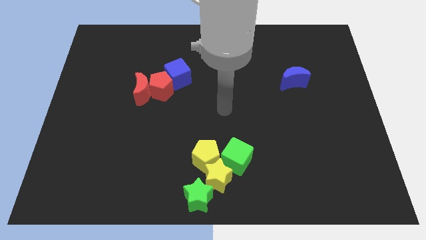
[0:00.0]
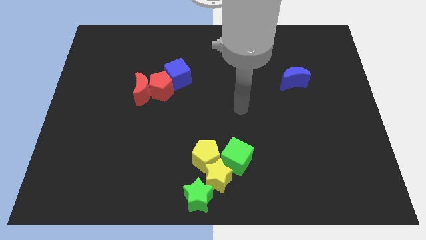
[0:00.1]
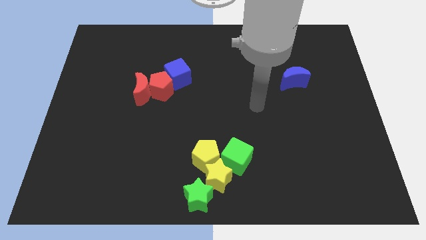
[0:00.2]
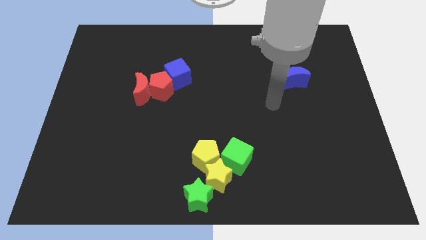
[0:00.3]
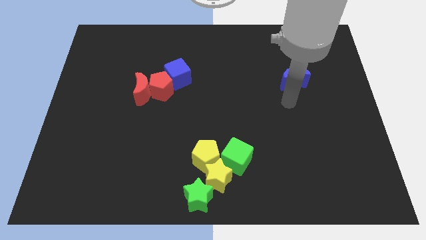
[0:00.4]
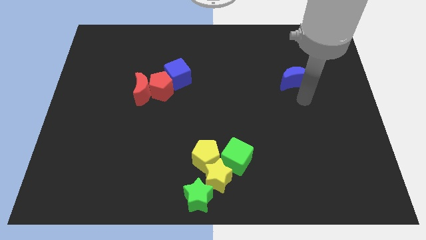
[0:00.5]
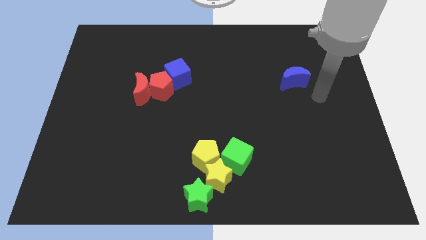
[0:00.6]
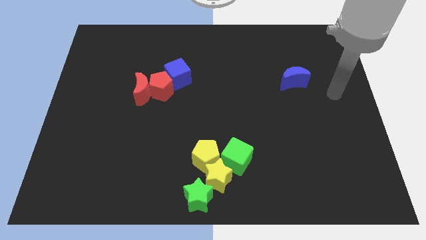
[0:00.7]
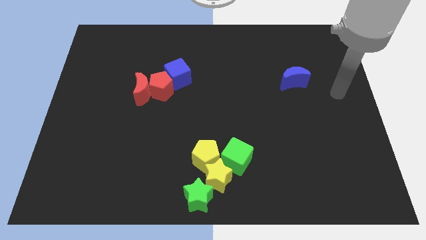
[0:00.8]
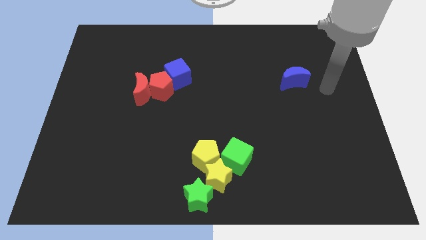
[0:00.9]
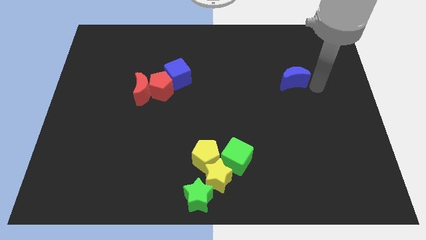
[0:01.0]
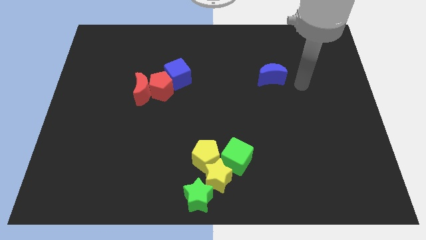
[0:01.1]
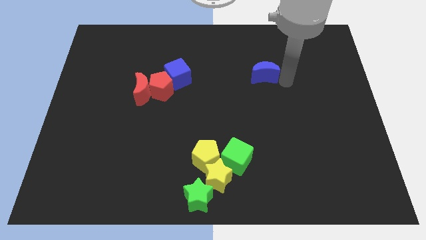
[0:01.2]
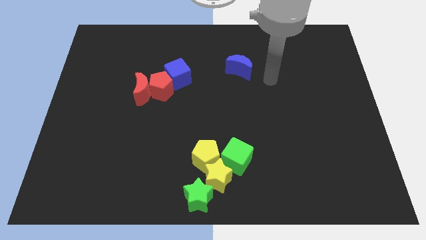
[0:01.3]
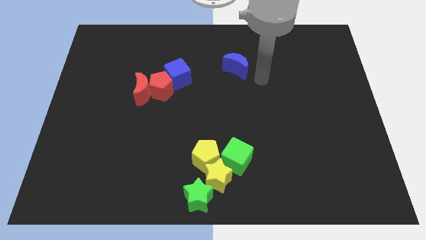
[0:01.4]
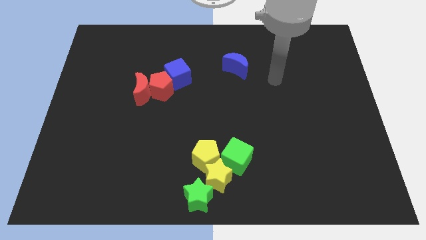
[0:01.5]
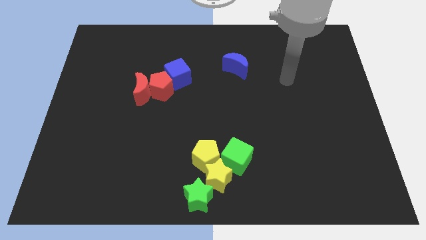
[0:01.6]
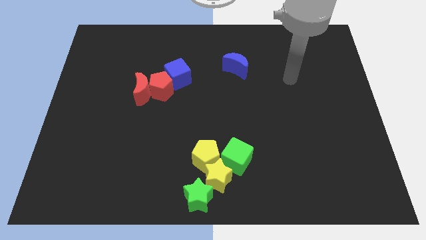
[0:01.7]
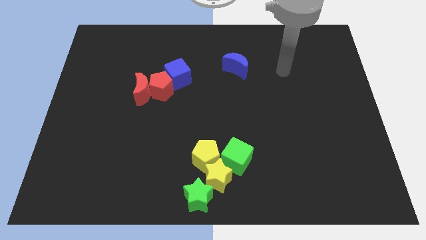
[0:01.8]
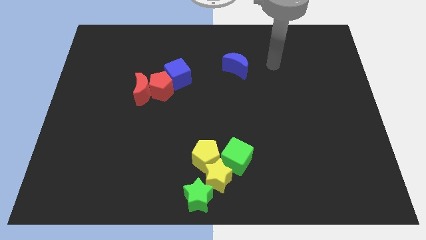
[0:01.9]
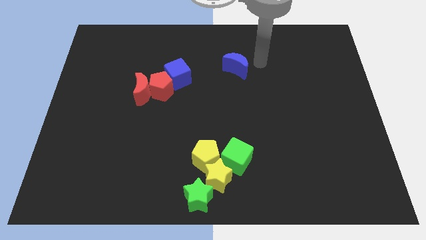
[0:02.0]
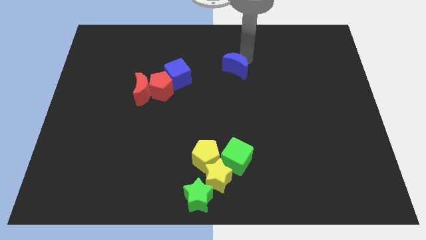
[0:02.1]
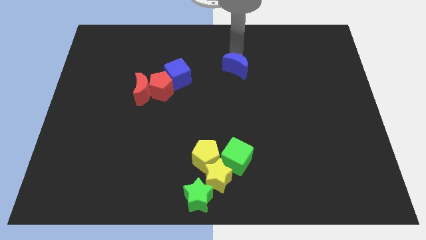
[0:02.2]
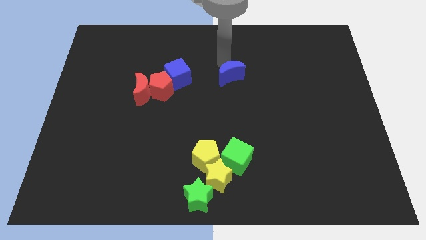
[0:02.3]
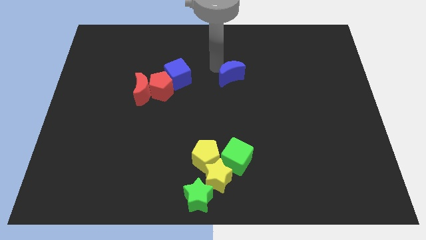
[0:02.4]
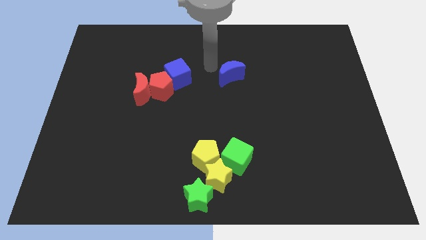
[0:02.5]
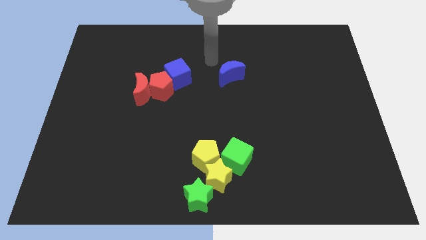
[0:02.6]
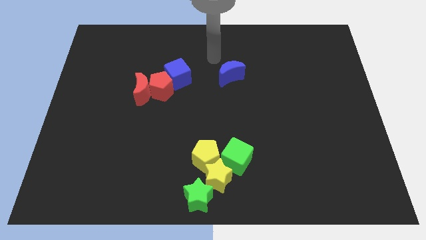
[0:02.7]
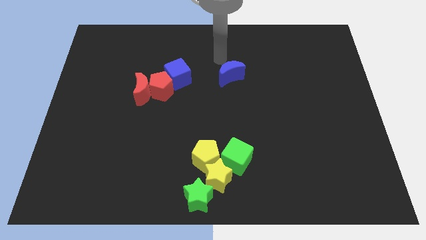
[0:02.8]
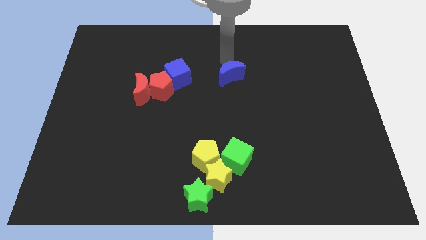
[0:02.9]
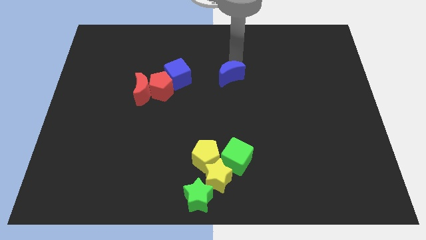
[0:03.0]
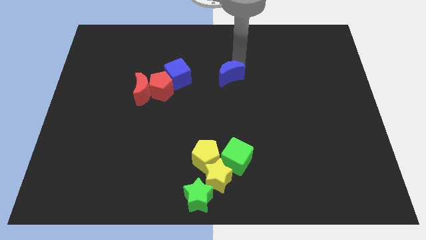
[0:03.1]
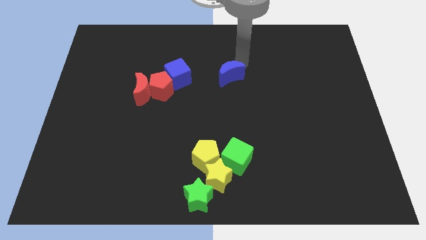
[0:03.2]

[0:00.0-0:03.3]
push blue crescent to the top center

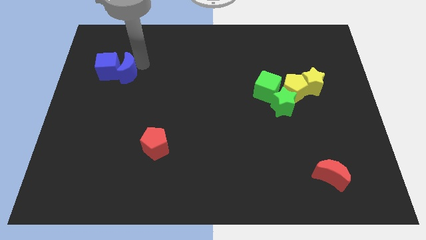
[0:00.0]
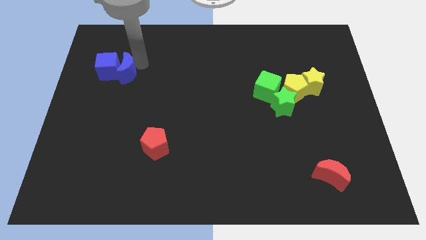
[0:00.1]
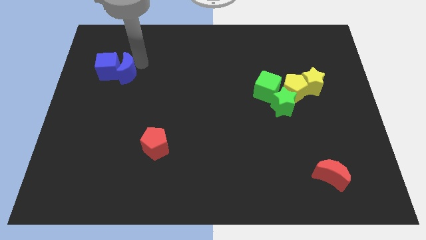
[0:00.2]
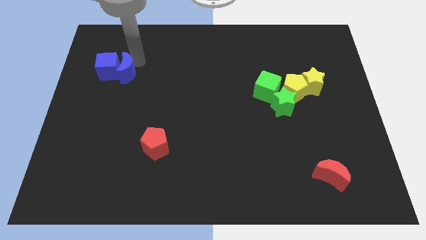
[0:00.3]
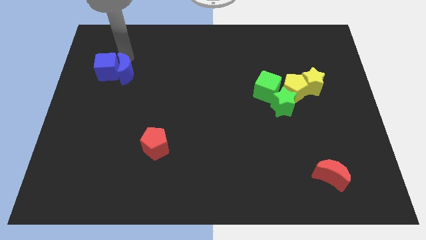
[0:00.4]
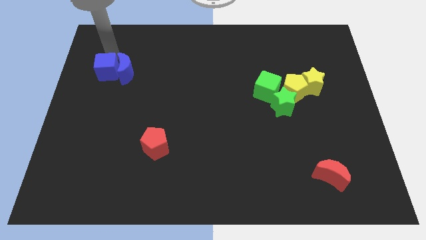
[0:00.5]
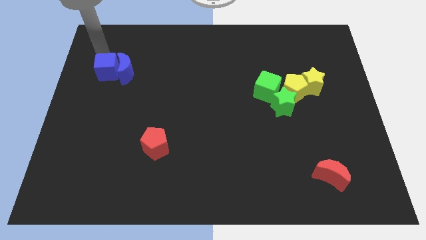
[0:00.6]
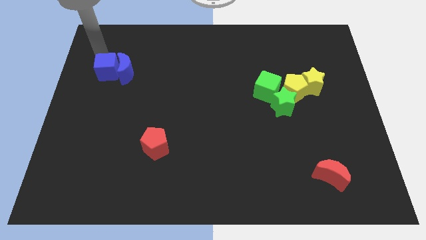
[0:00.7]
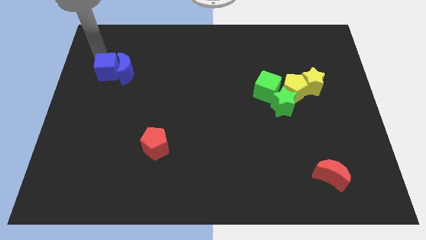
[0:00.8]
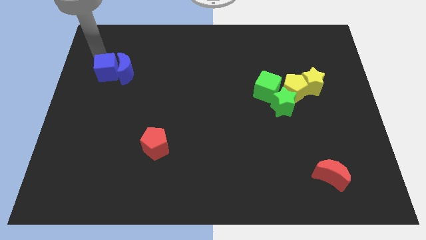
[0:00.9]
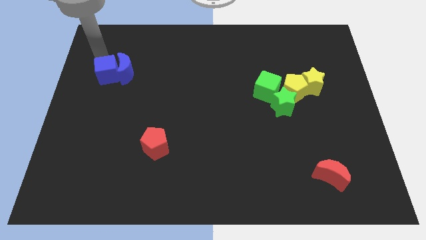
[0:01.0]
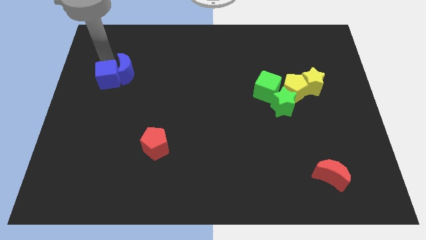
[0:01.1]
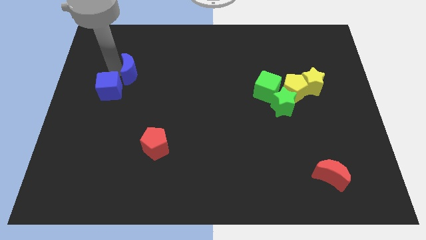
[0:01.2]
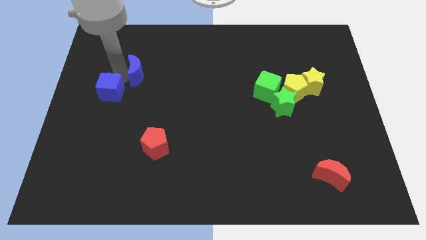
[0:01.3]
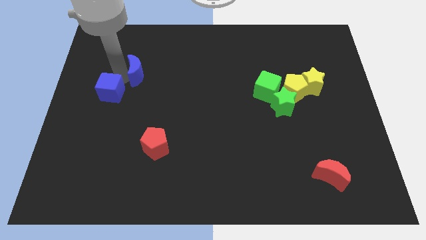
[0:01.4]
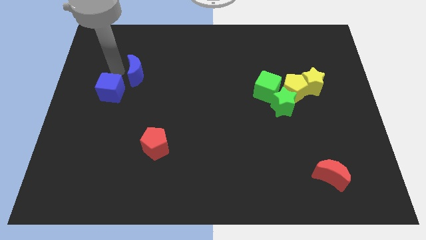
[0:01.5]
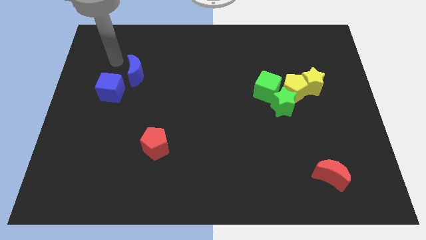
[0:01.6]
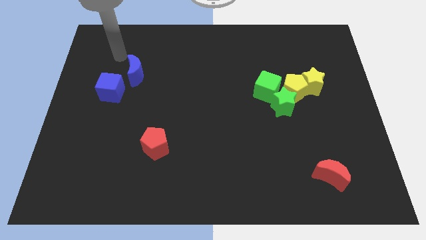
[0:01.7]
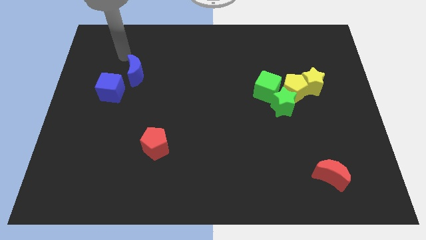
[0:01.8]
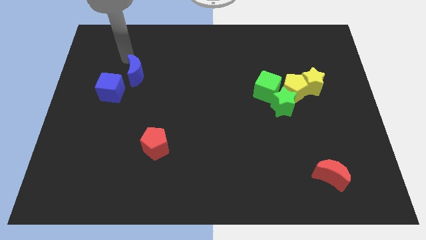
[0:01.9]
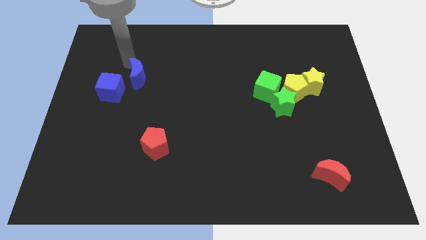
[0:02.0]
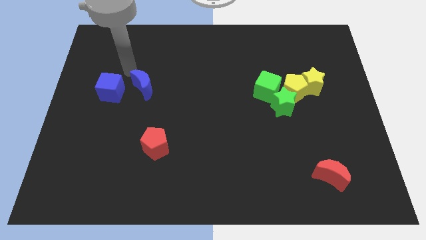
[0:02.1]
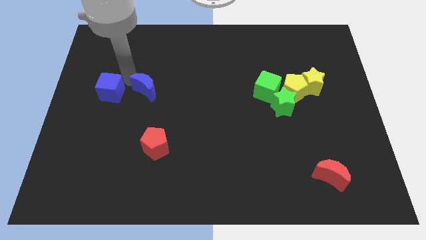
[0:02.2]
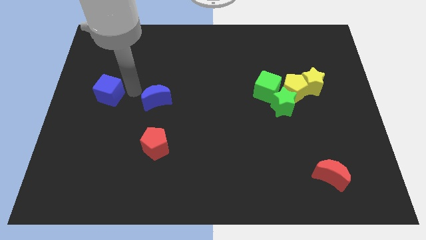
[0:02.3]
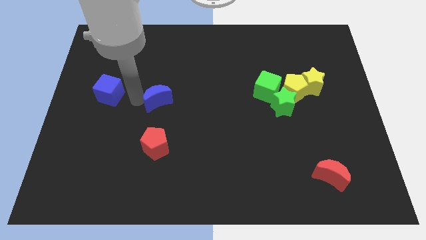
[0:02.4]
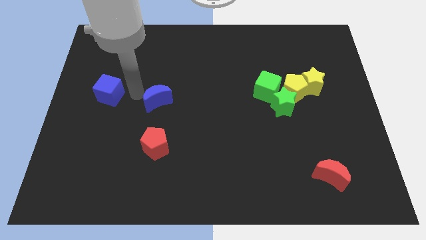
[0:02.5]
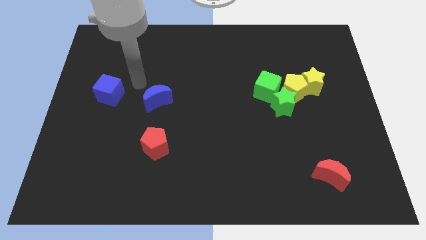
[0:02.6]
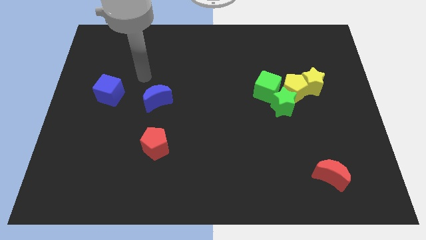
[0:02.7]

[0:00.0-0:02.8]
separate the blue cube and blue moon

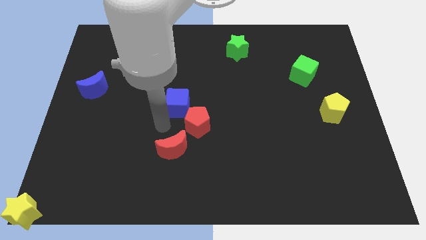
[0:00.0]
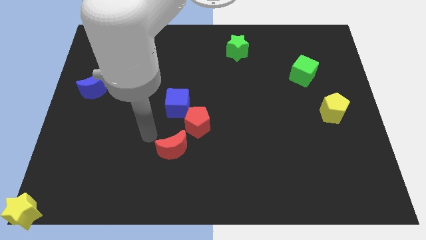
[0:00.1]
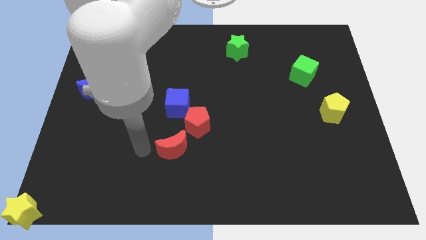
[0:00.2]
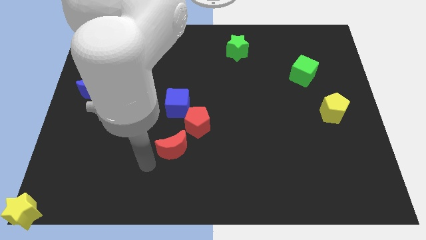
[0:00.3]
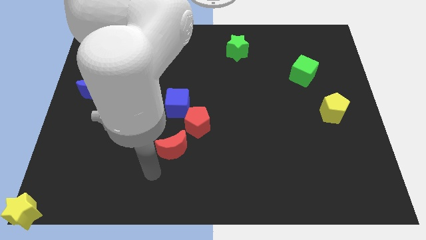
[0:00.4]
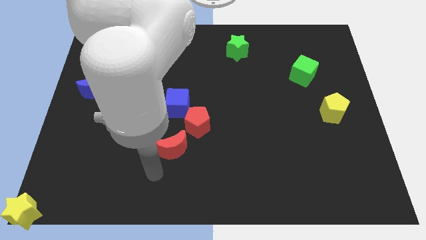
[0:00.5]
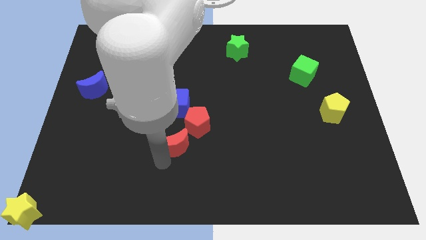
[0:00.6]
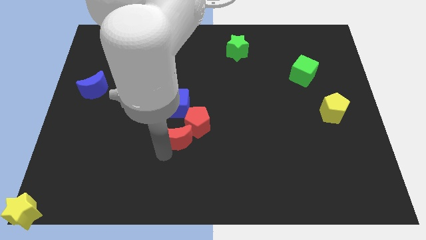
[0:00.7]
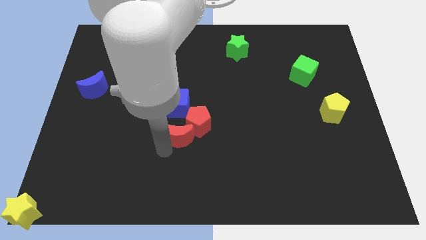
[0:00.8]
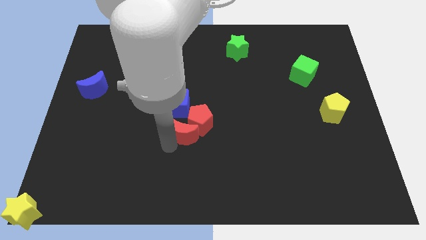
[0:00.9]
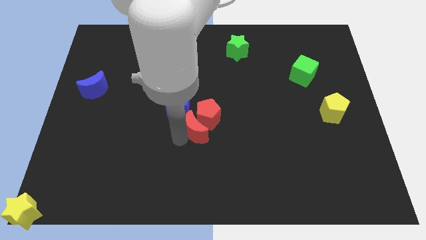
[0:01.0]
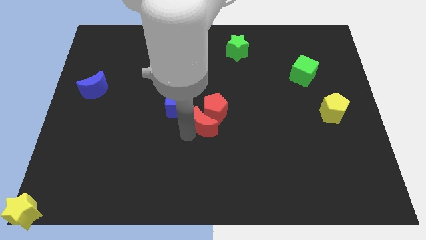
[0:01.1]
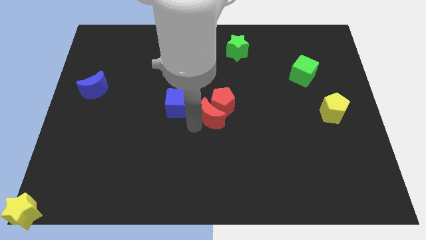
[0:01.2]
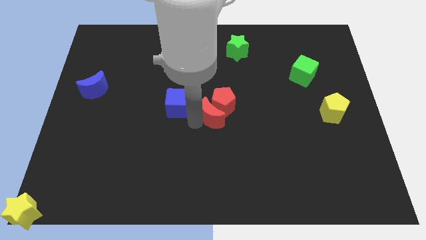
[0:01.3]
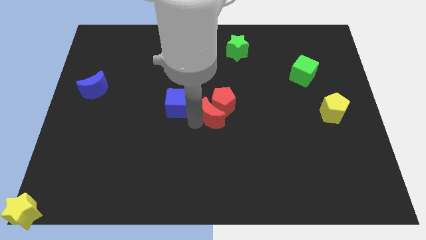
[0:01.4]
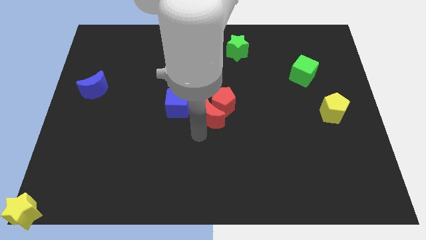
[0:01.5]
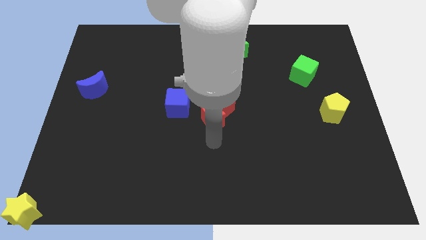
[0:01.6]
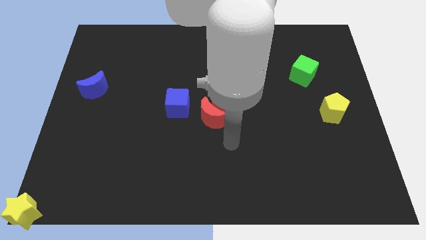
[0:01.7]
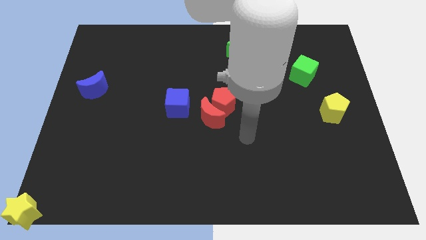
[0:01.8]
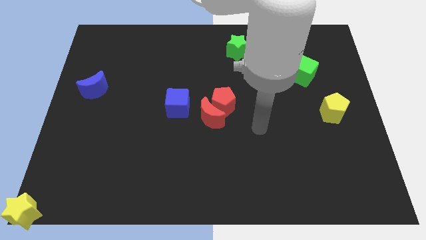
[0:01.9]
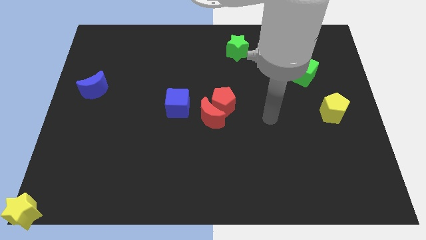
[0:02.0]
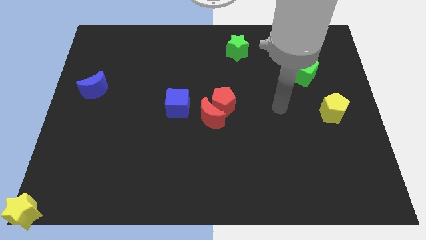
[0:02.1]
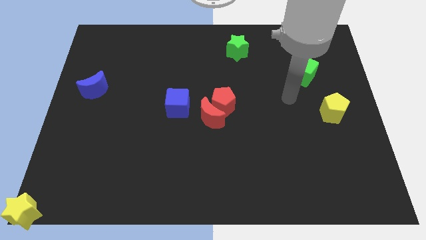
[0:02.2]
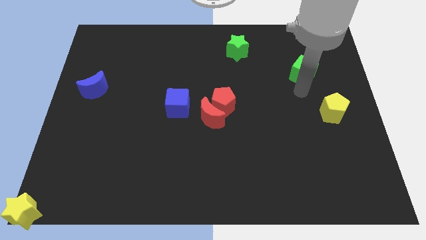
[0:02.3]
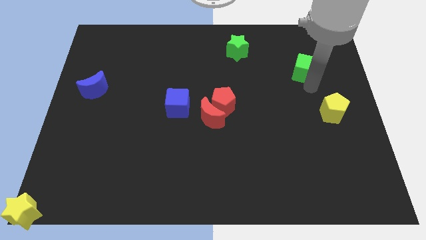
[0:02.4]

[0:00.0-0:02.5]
move red crescent into red pentagon

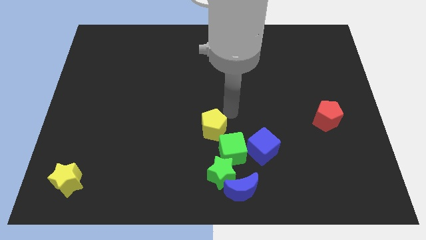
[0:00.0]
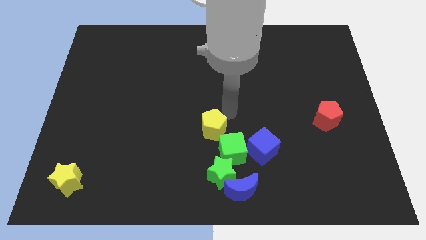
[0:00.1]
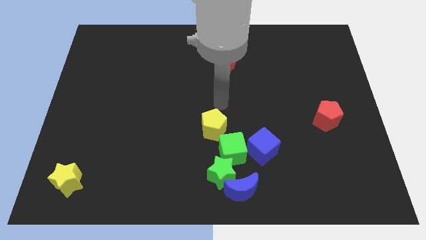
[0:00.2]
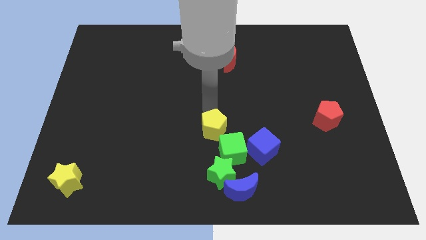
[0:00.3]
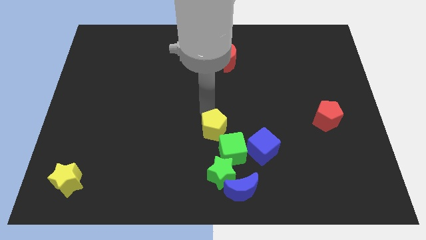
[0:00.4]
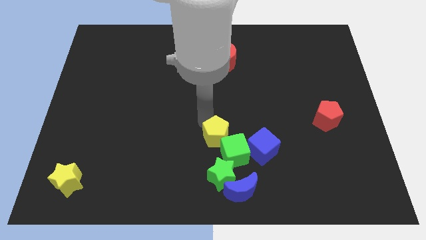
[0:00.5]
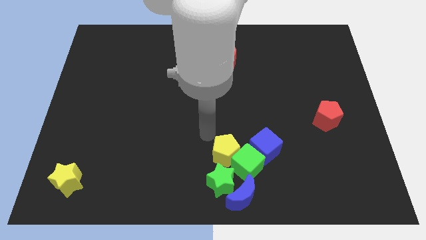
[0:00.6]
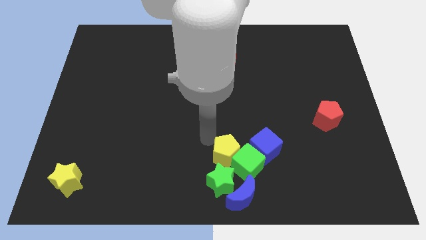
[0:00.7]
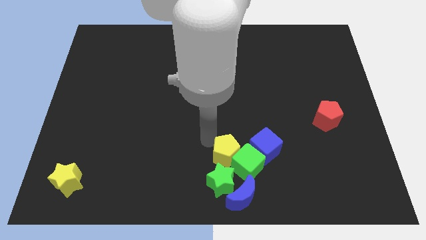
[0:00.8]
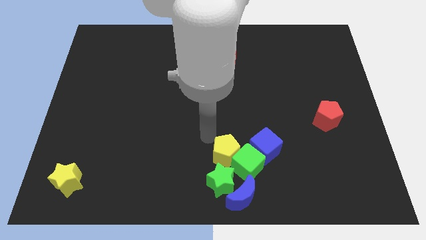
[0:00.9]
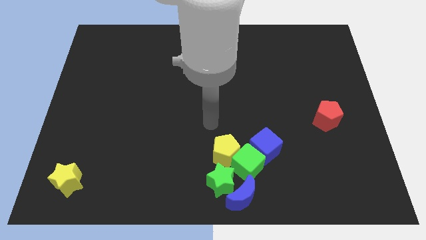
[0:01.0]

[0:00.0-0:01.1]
push yellow pentagon into the green cube
